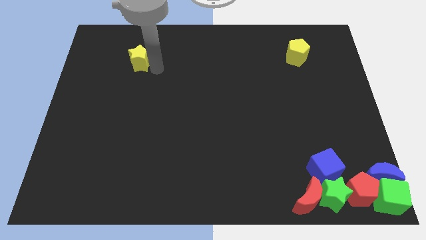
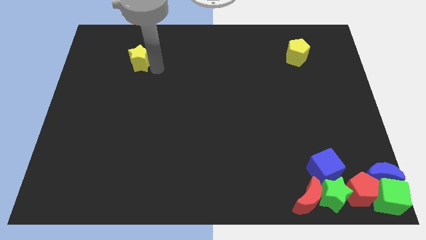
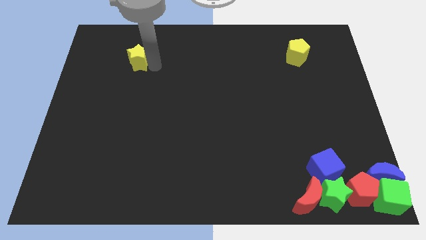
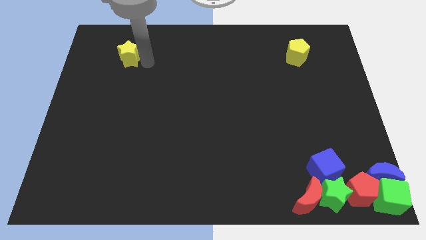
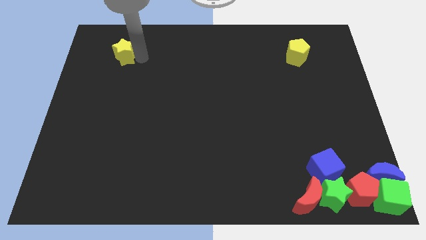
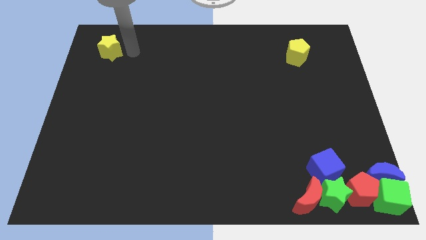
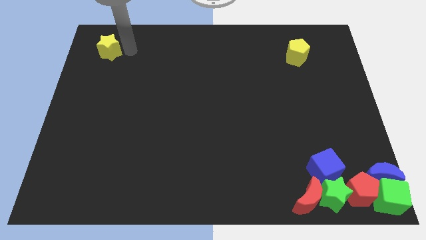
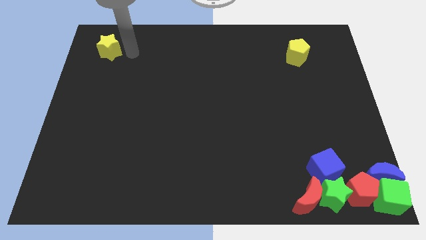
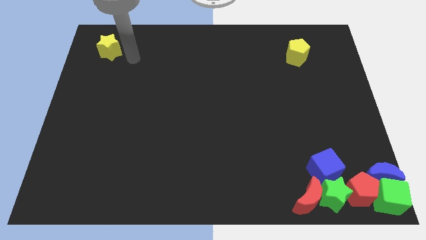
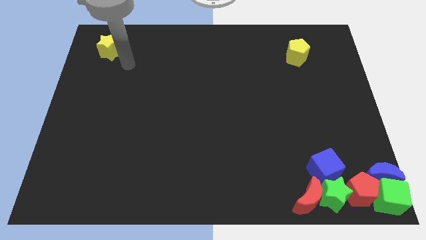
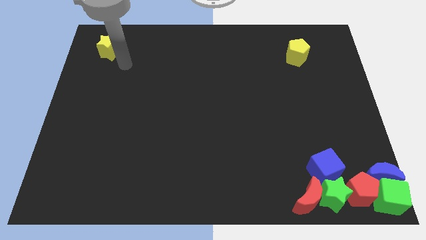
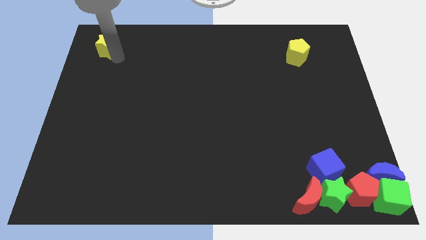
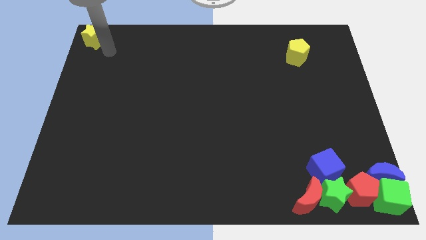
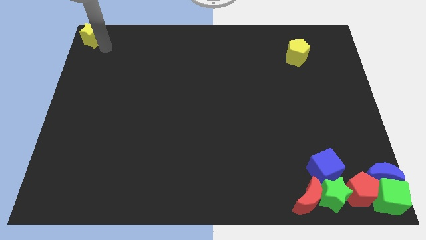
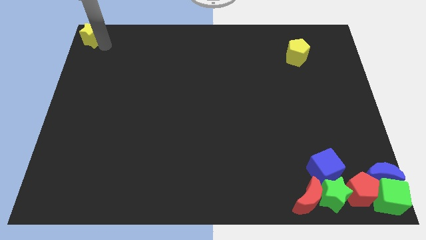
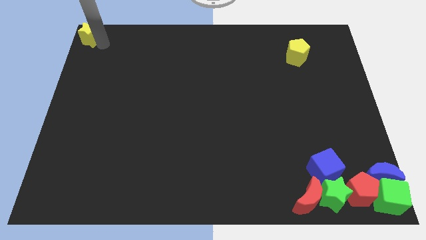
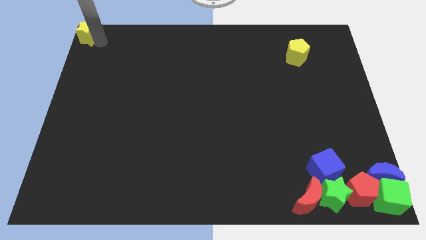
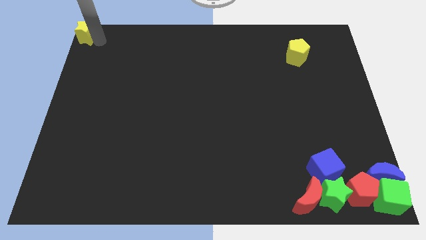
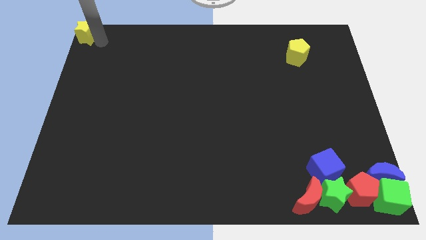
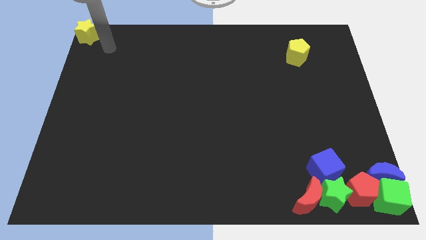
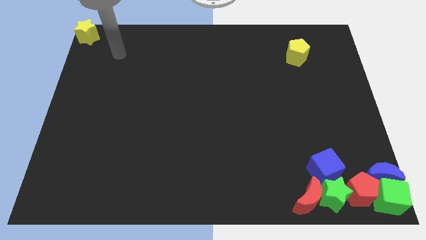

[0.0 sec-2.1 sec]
move the yellow star towards the top left corner of the board

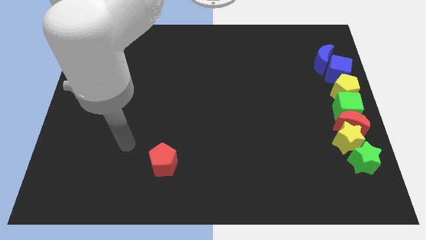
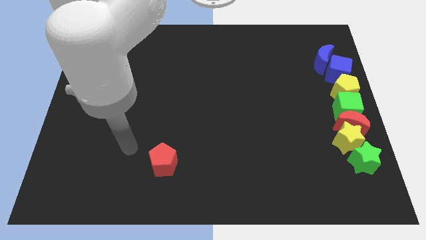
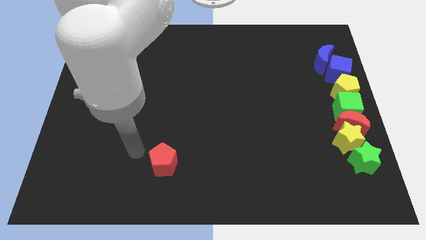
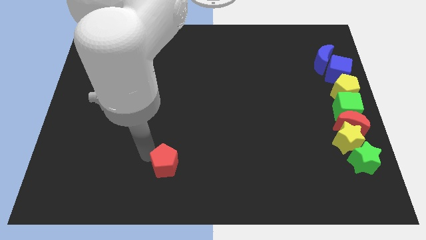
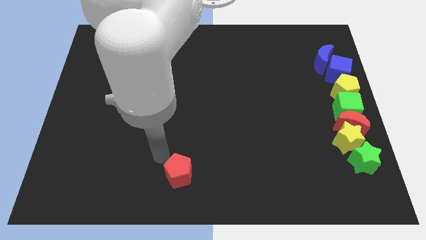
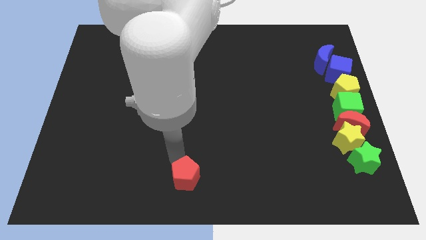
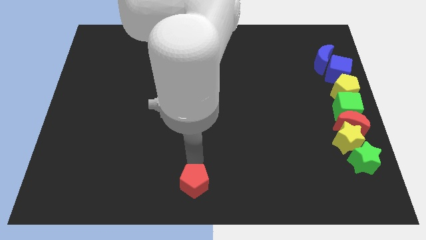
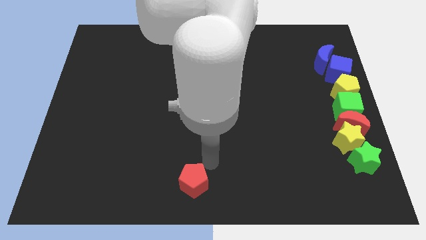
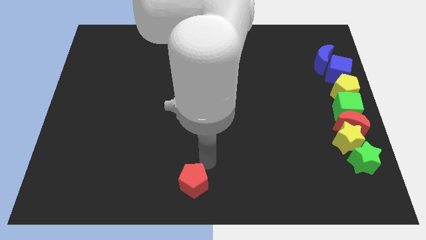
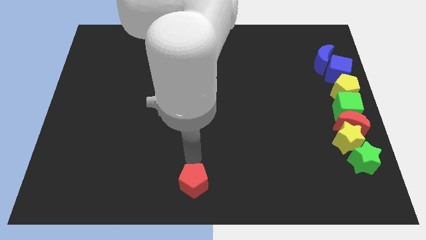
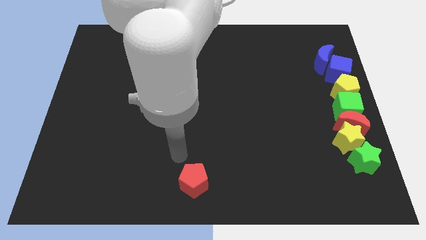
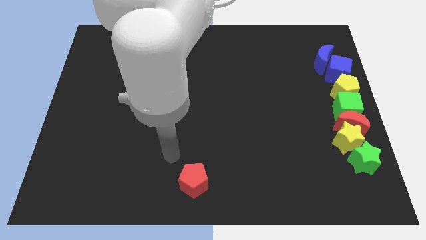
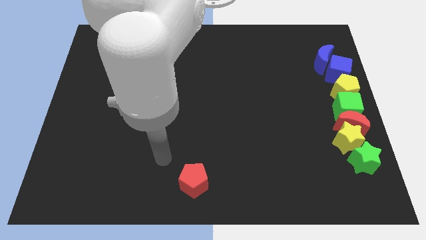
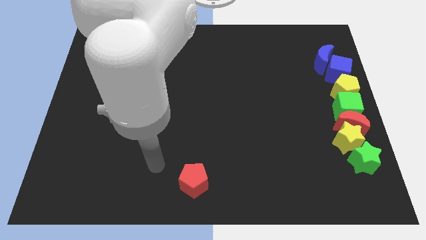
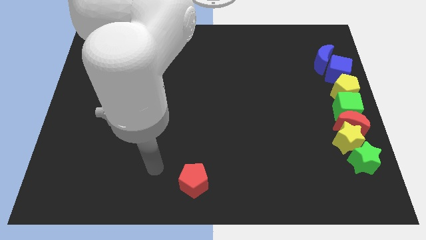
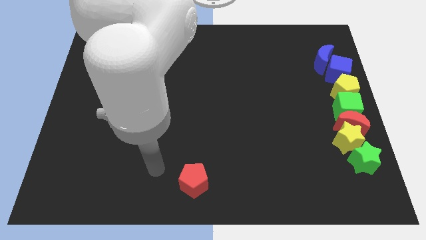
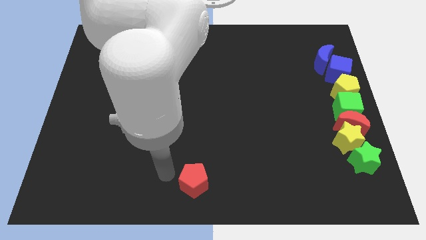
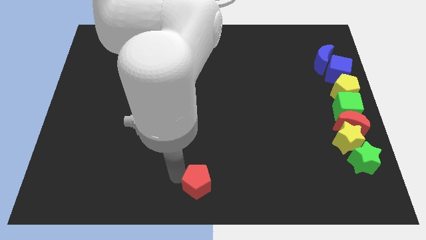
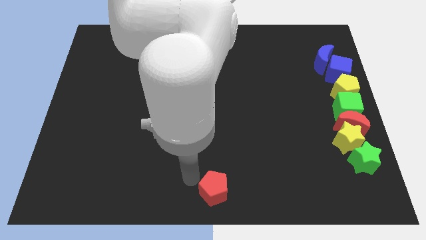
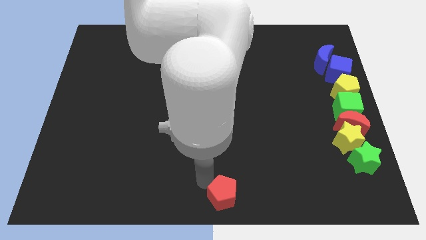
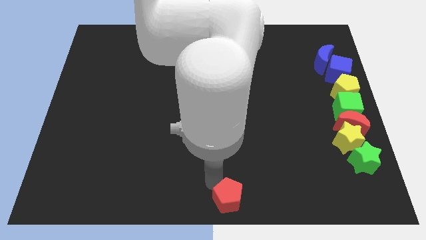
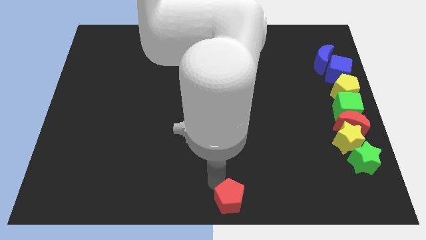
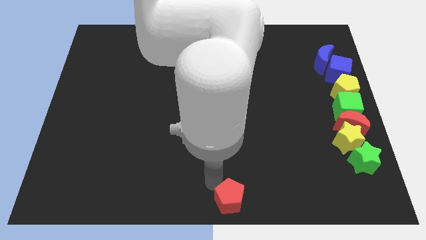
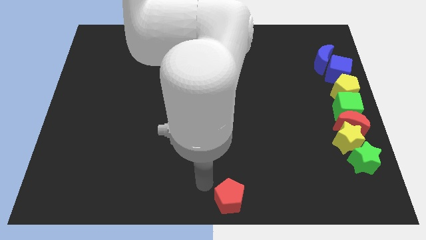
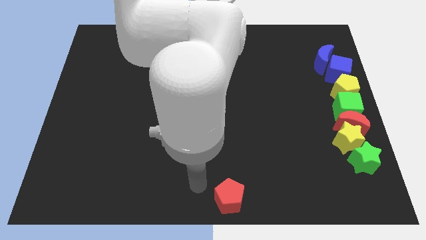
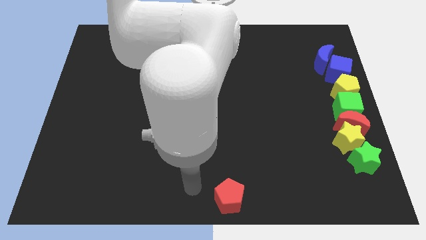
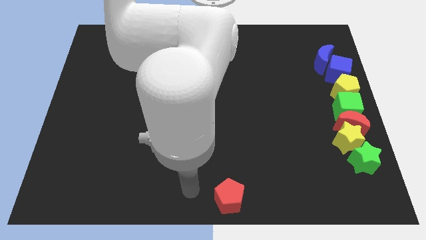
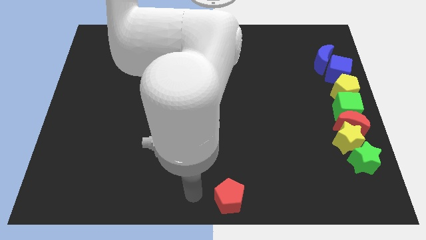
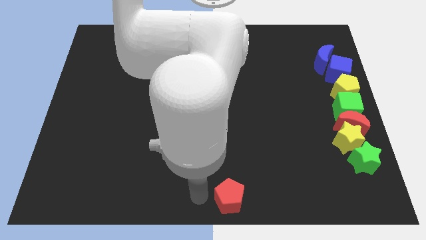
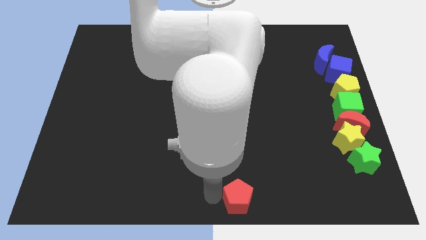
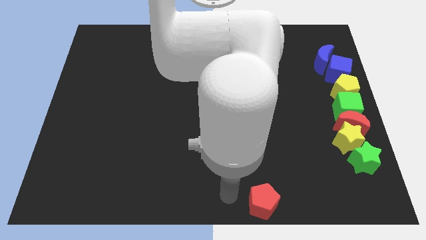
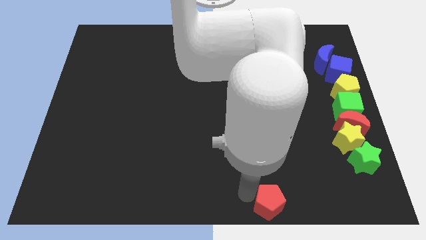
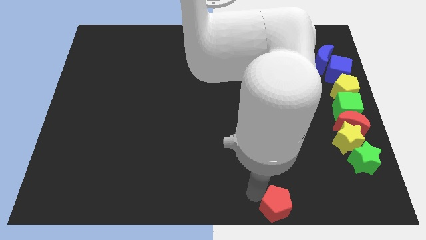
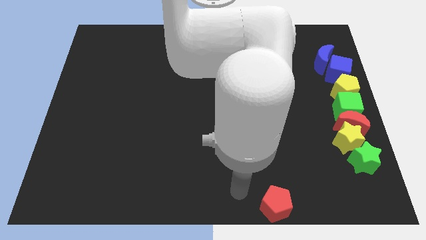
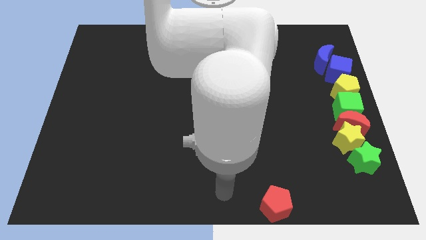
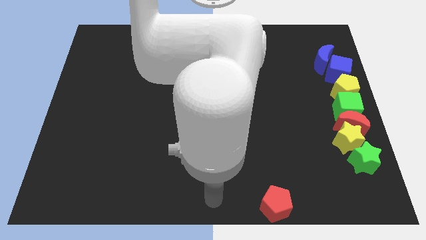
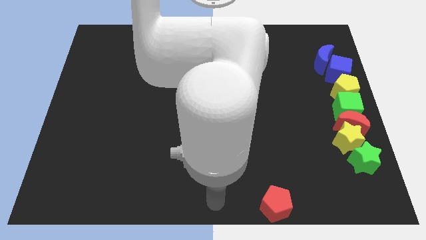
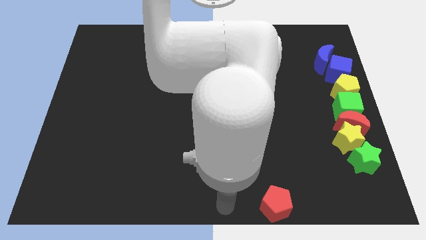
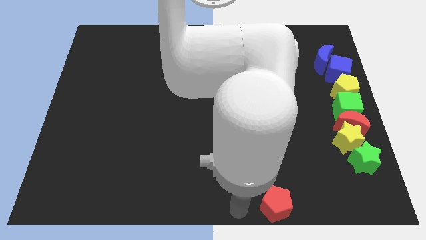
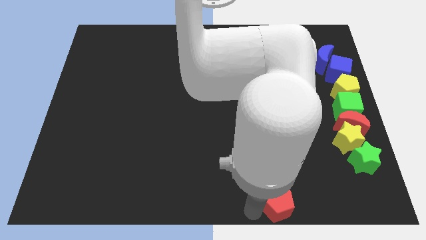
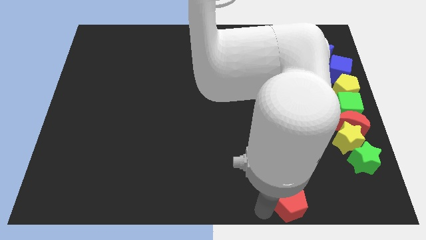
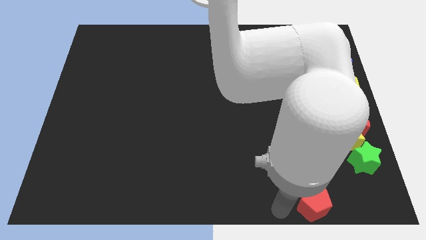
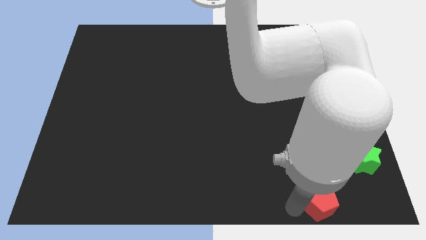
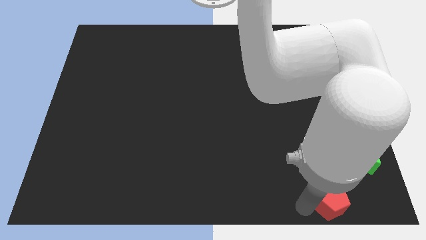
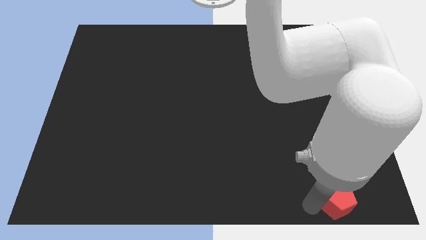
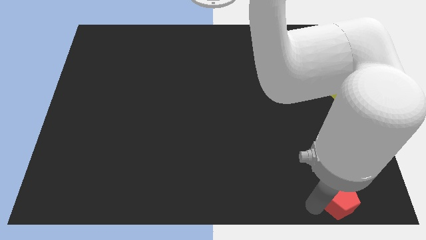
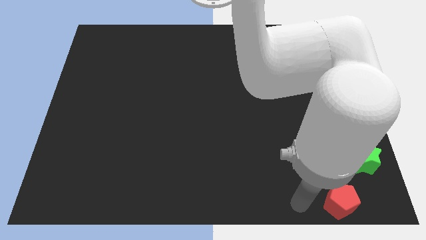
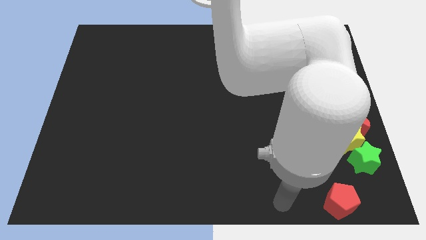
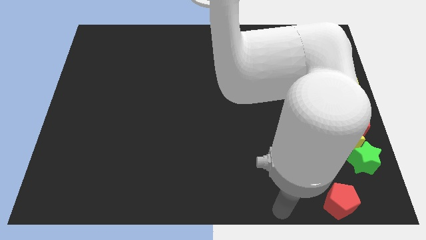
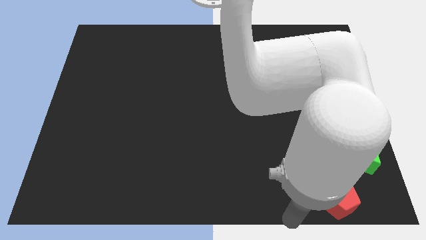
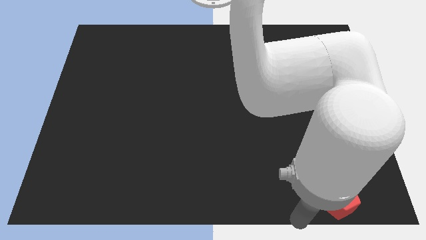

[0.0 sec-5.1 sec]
slide red pentagon towards green star

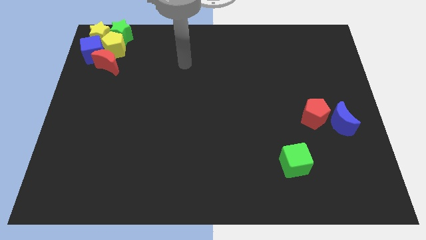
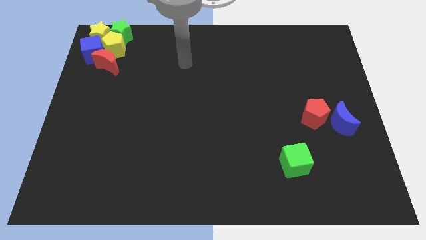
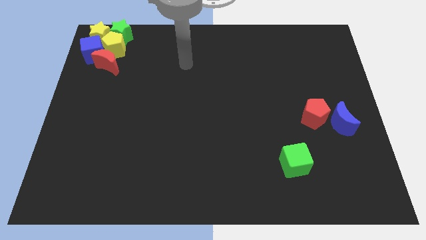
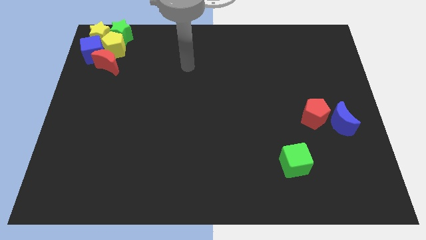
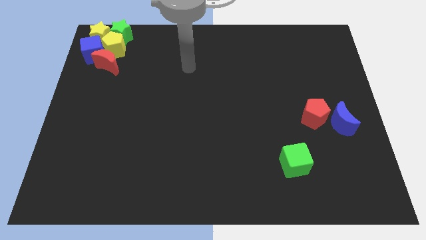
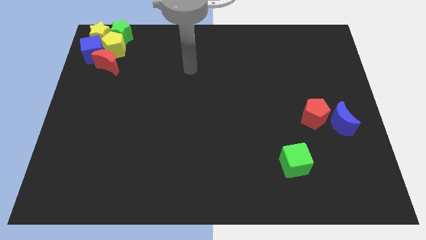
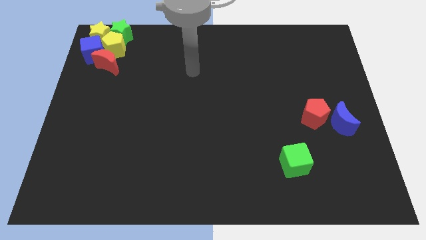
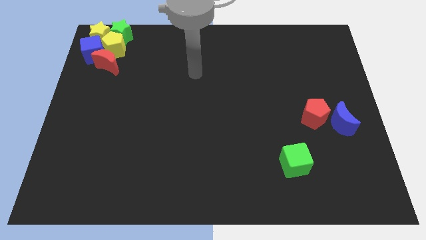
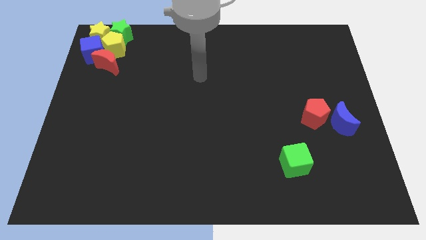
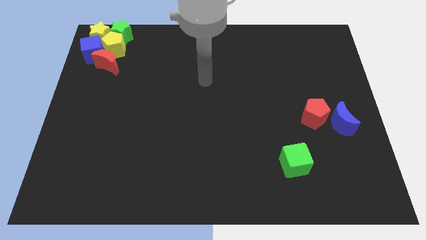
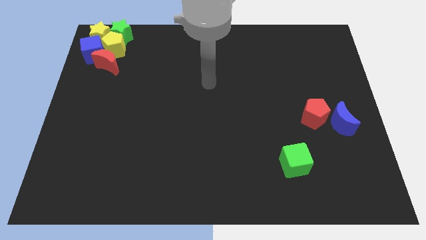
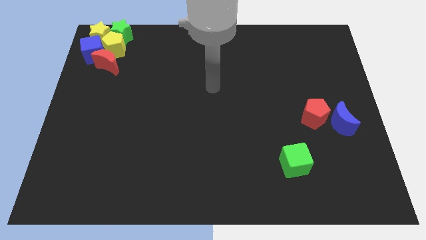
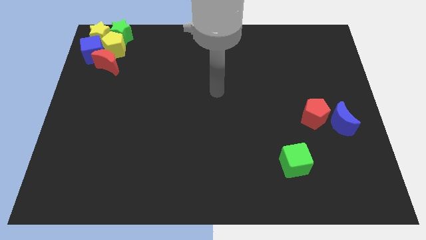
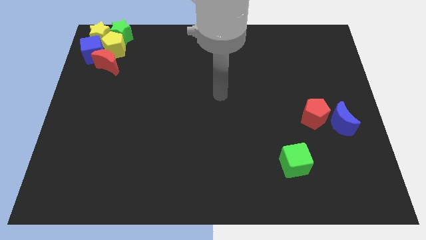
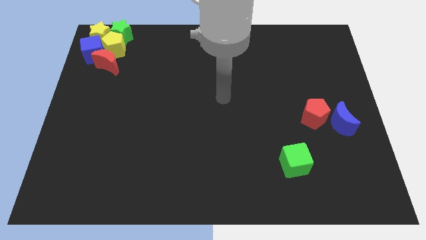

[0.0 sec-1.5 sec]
point your arm at the center of the board

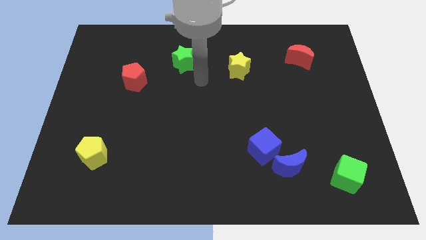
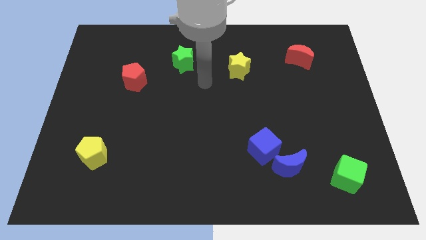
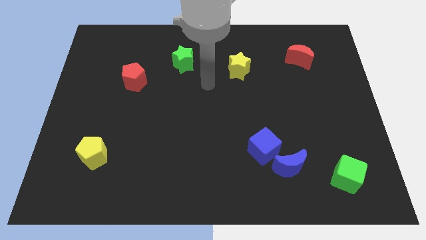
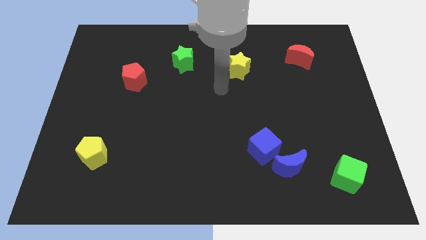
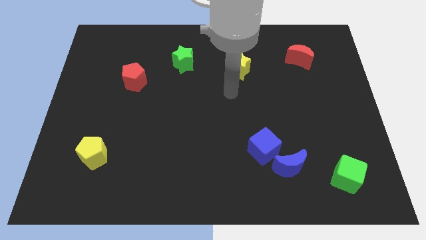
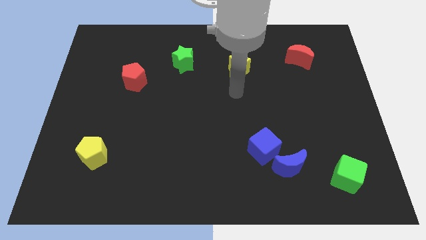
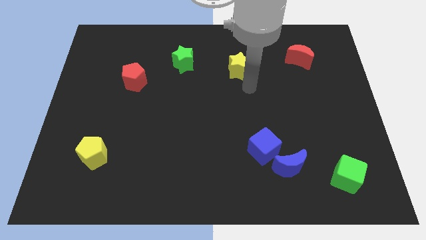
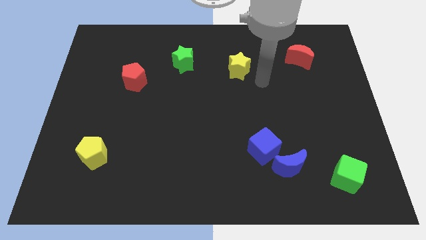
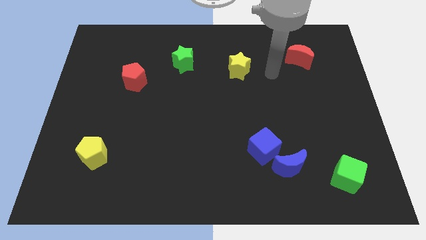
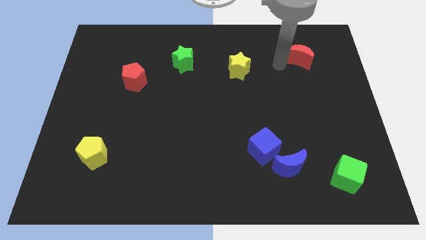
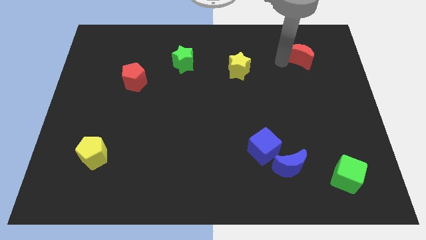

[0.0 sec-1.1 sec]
tap the red crescent
